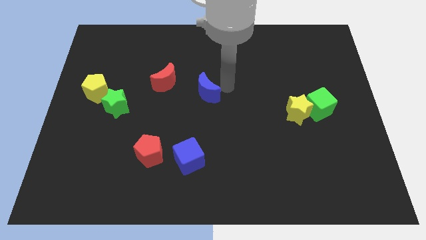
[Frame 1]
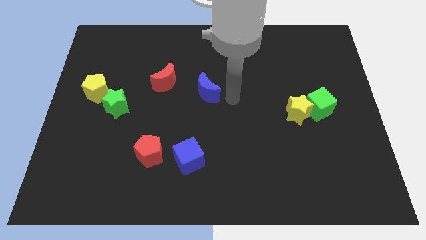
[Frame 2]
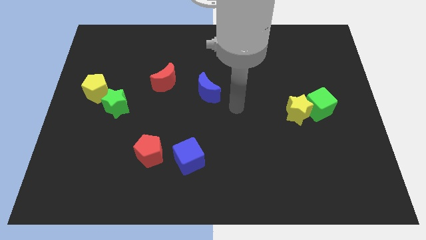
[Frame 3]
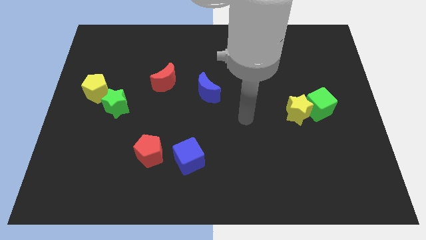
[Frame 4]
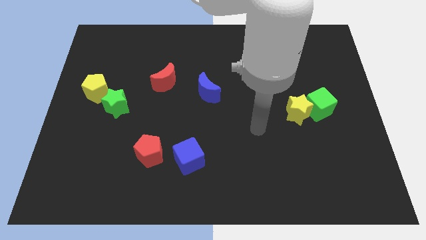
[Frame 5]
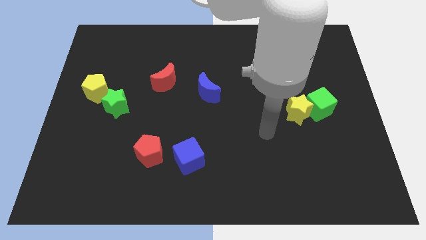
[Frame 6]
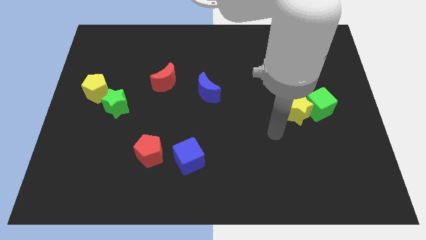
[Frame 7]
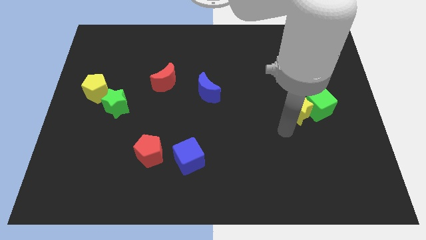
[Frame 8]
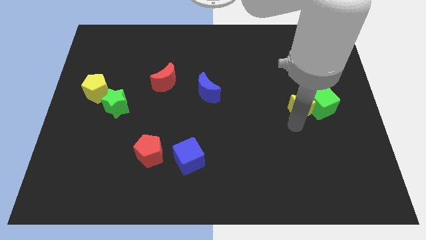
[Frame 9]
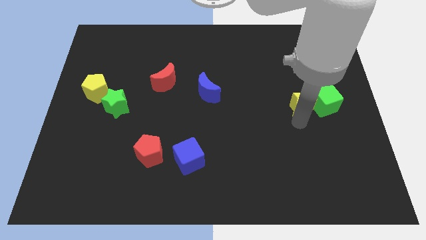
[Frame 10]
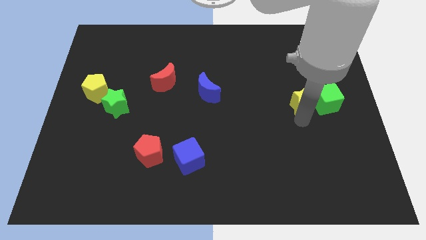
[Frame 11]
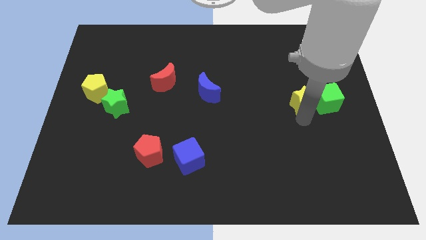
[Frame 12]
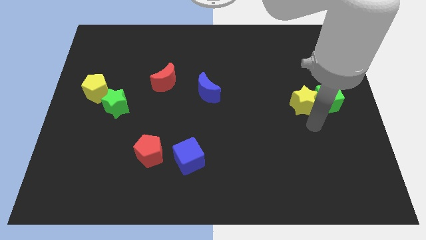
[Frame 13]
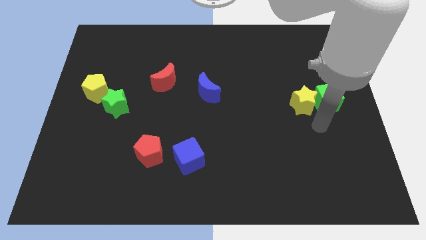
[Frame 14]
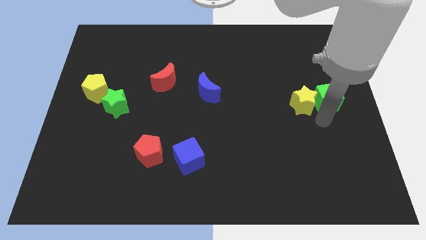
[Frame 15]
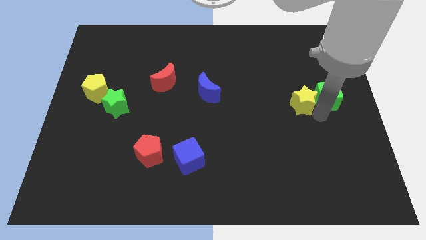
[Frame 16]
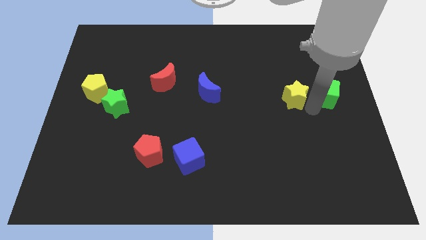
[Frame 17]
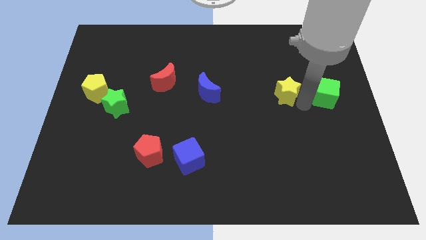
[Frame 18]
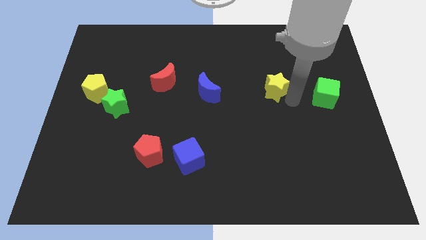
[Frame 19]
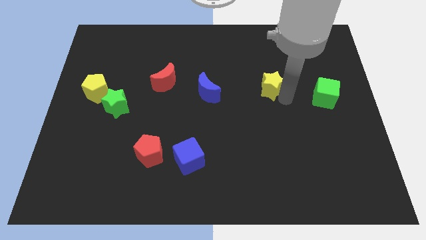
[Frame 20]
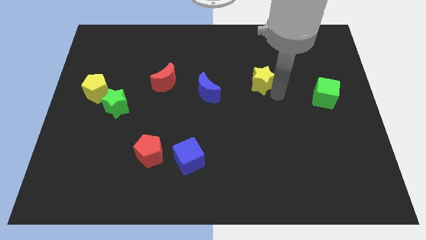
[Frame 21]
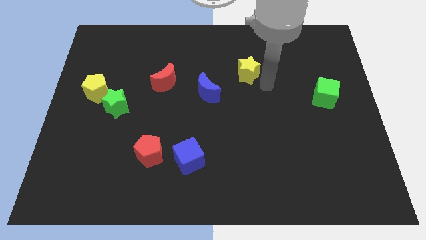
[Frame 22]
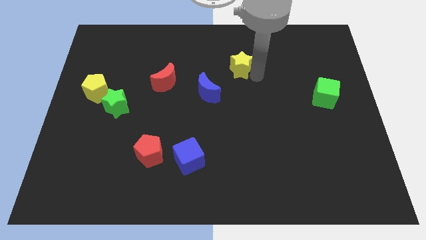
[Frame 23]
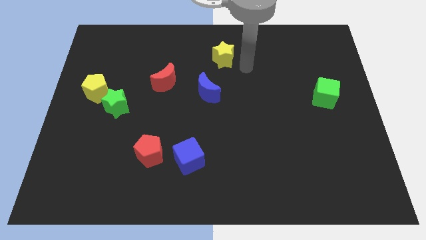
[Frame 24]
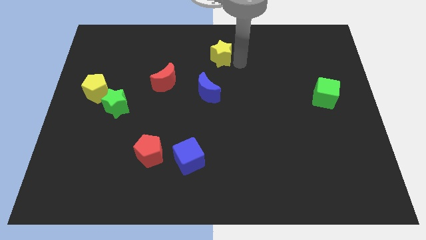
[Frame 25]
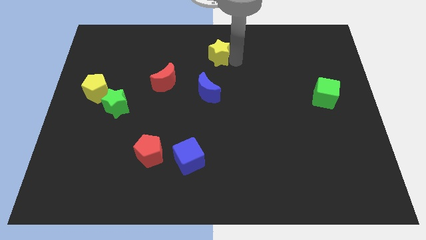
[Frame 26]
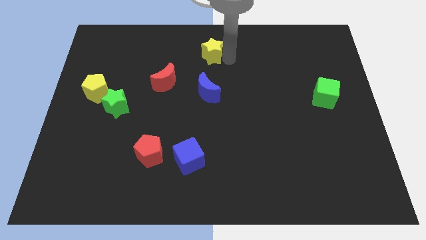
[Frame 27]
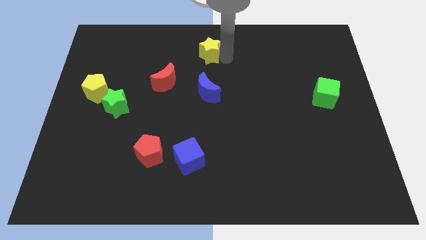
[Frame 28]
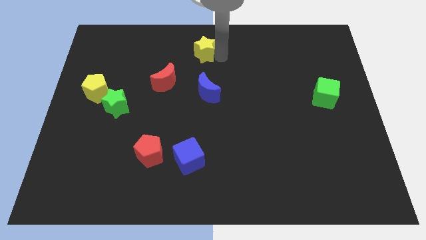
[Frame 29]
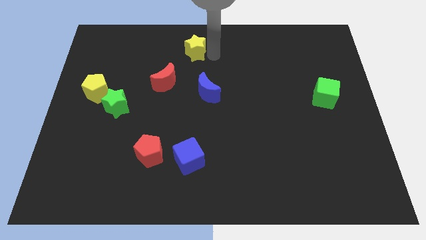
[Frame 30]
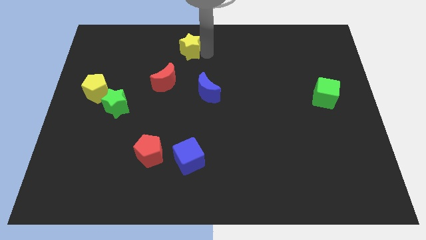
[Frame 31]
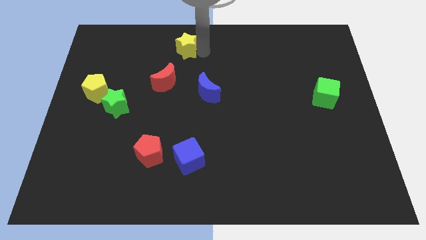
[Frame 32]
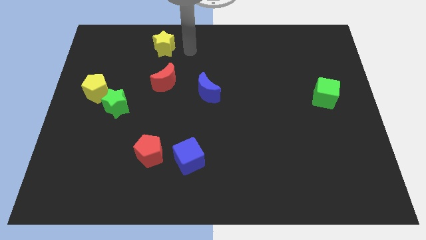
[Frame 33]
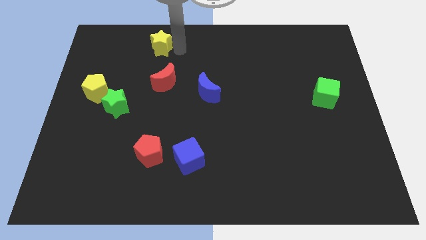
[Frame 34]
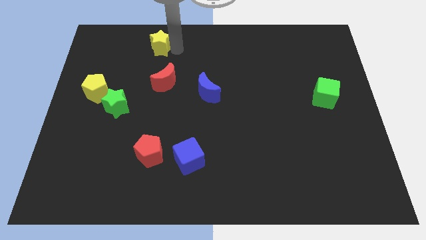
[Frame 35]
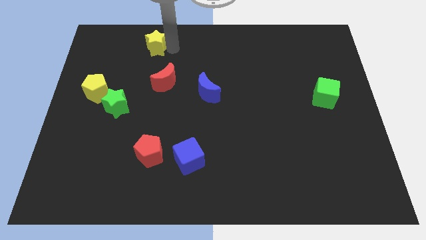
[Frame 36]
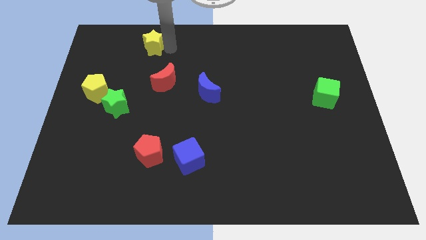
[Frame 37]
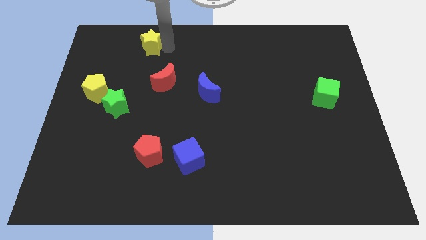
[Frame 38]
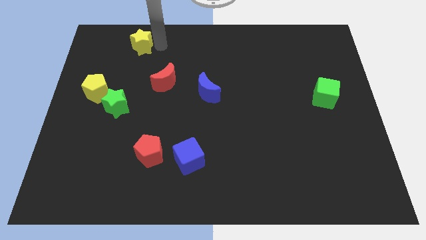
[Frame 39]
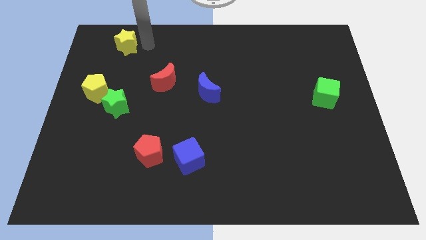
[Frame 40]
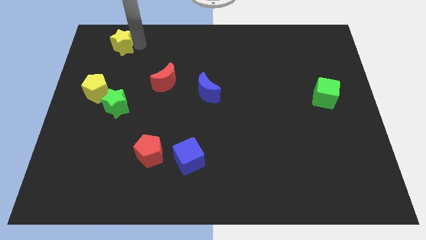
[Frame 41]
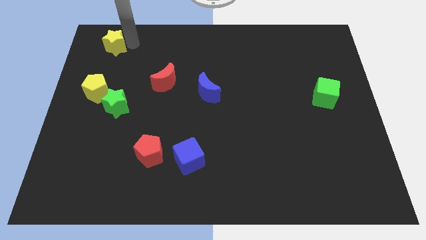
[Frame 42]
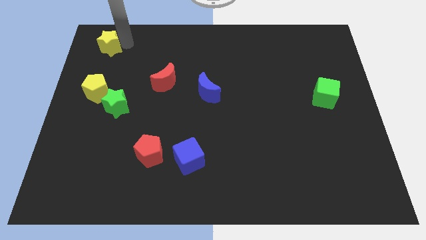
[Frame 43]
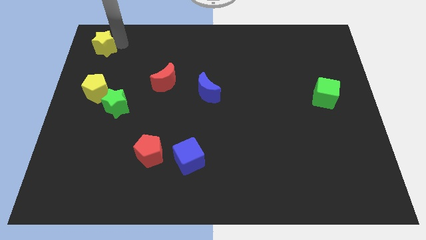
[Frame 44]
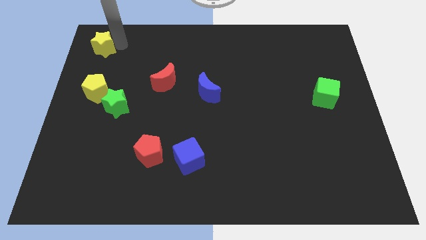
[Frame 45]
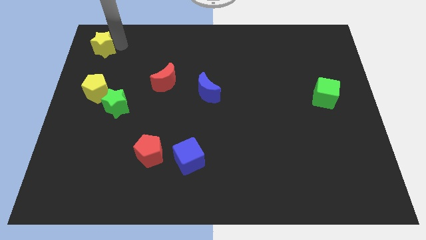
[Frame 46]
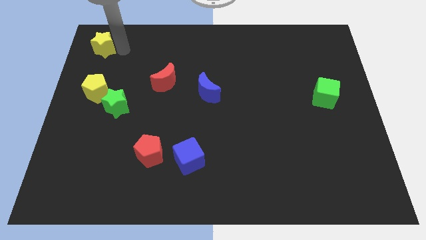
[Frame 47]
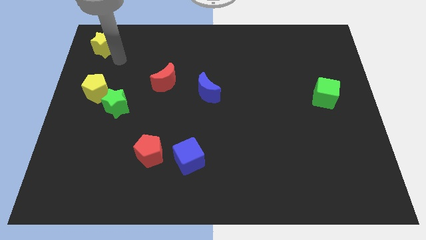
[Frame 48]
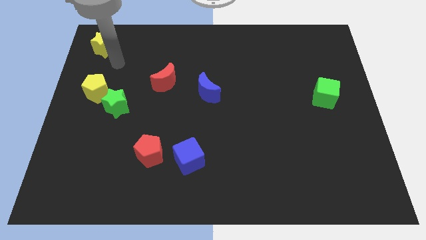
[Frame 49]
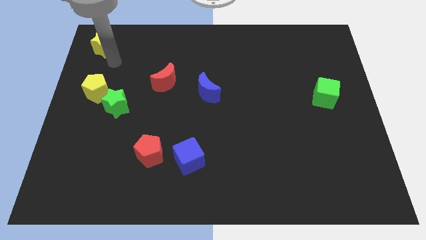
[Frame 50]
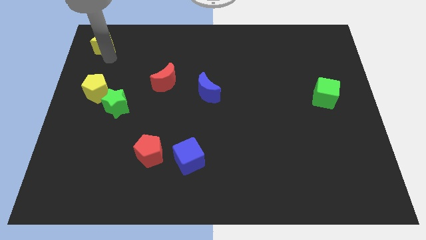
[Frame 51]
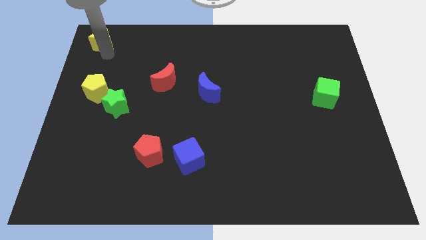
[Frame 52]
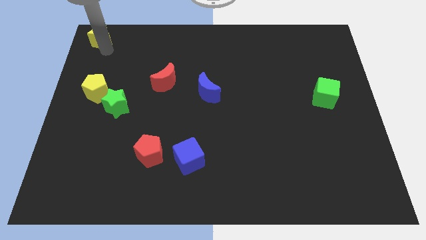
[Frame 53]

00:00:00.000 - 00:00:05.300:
place the yellow star above the yellow pentagon

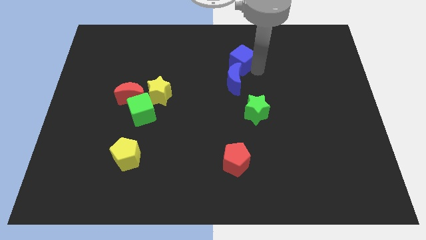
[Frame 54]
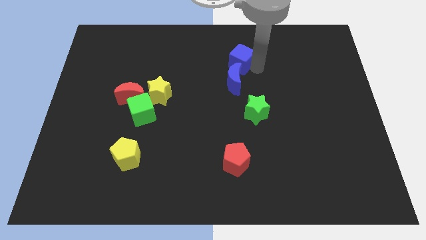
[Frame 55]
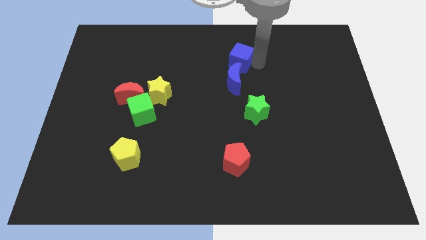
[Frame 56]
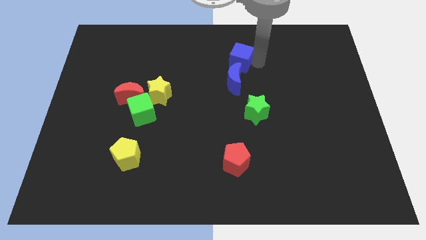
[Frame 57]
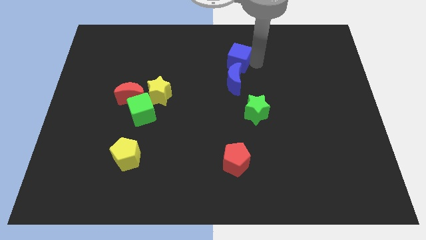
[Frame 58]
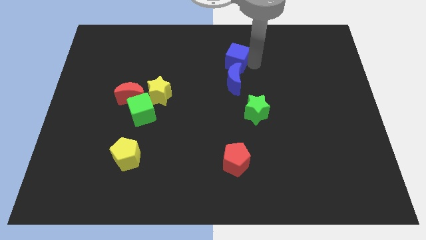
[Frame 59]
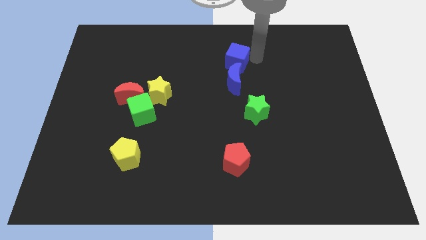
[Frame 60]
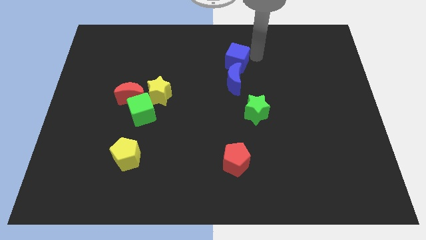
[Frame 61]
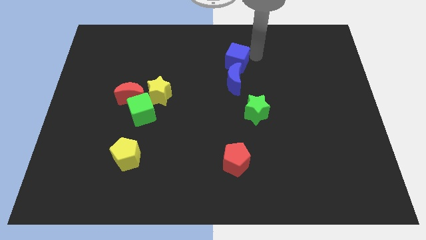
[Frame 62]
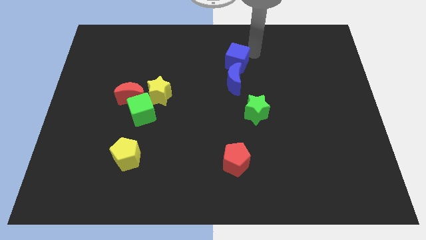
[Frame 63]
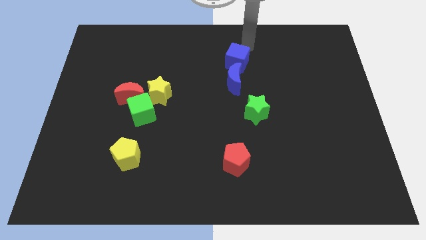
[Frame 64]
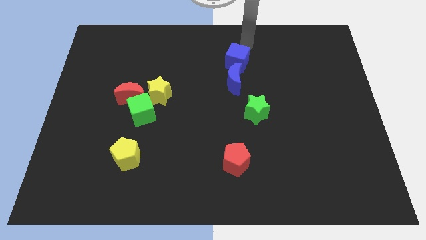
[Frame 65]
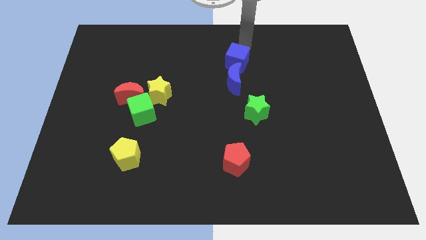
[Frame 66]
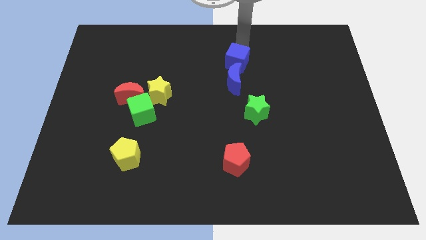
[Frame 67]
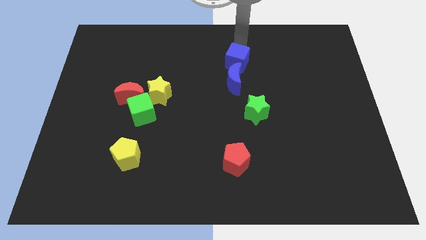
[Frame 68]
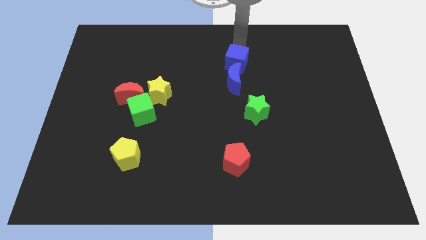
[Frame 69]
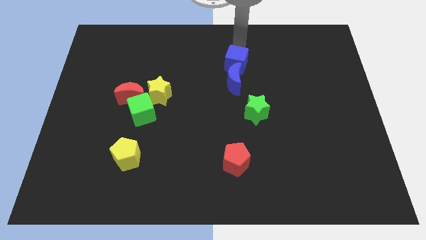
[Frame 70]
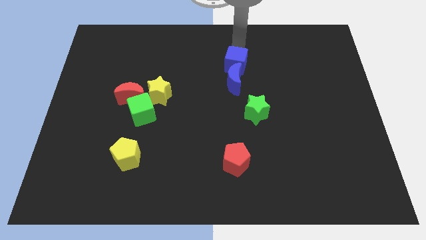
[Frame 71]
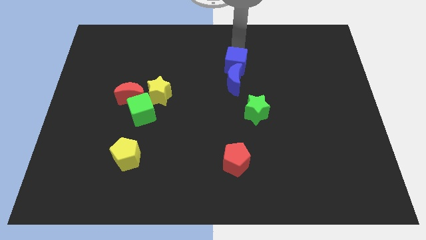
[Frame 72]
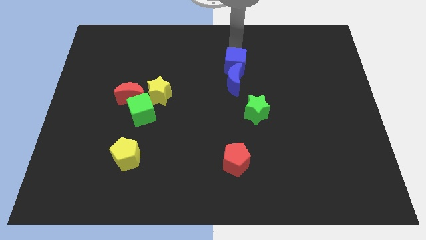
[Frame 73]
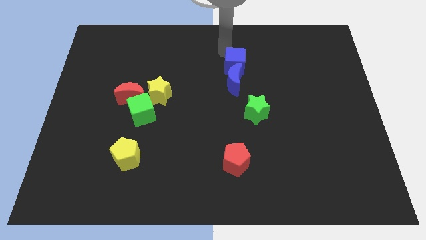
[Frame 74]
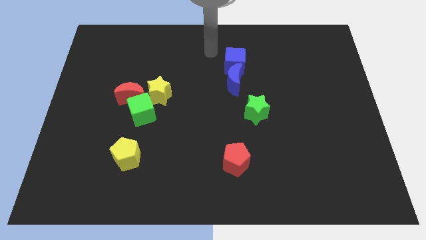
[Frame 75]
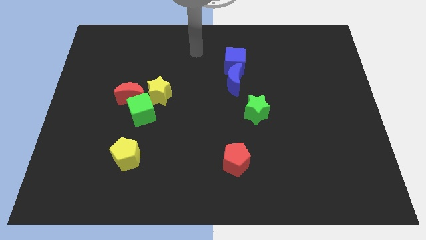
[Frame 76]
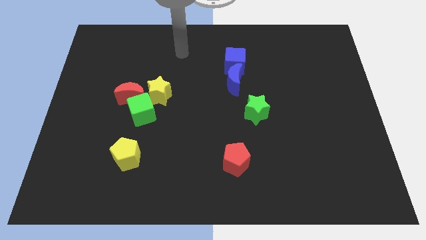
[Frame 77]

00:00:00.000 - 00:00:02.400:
move the blue cube into the blue moon

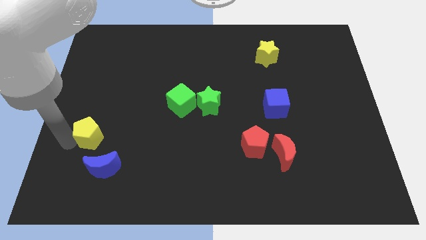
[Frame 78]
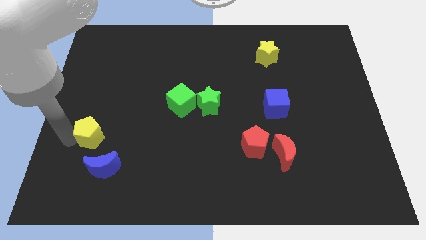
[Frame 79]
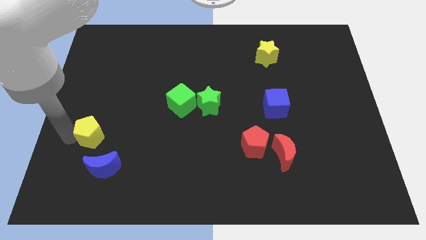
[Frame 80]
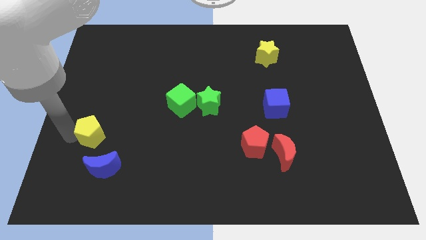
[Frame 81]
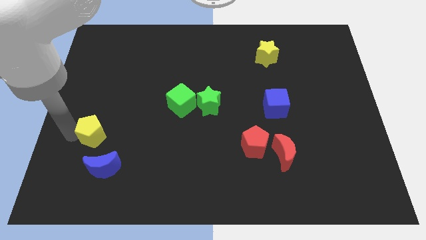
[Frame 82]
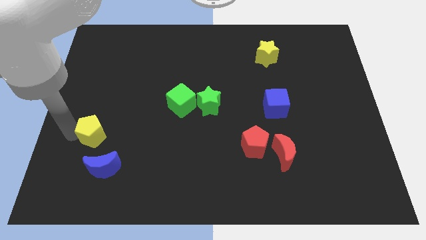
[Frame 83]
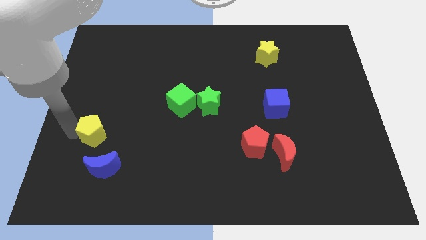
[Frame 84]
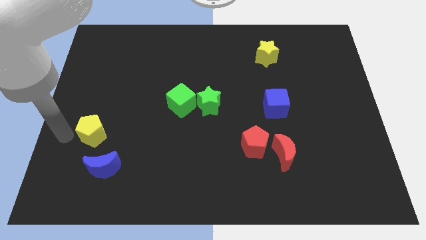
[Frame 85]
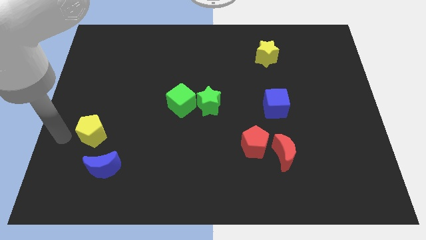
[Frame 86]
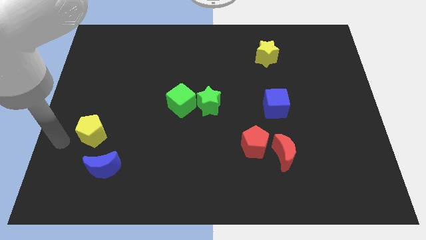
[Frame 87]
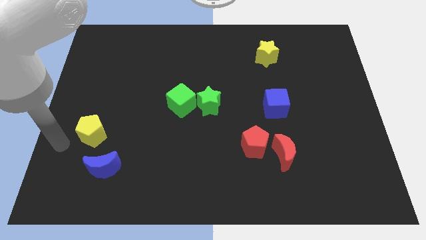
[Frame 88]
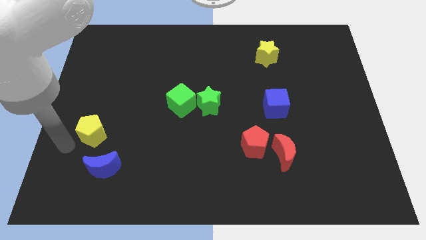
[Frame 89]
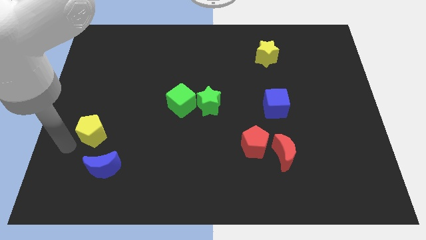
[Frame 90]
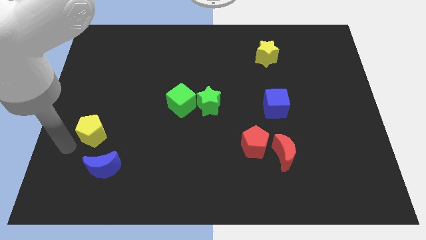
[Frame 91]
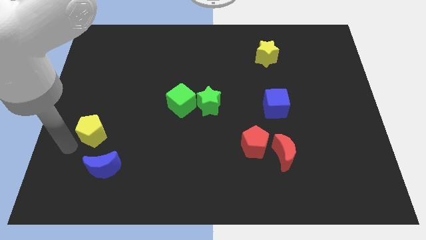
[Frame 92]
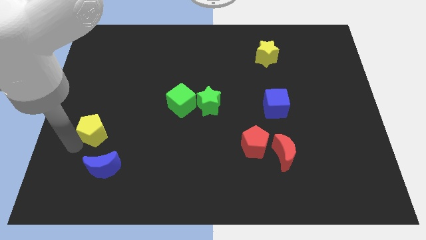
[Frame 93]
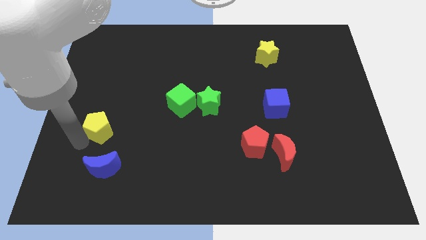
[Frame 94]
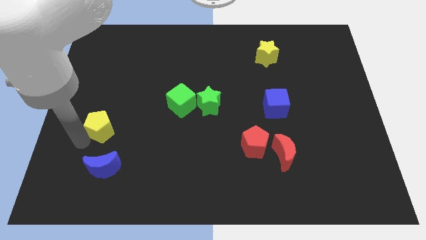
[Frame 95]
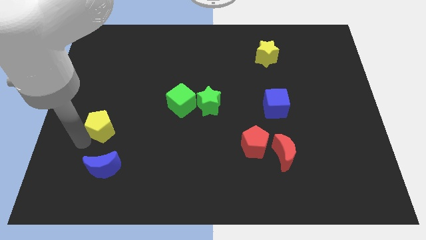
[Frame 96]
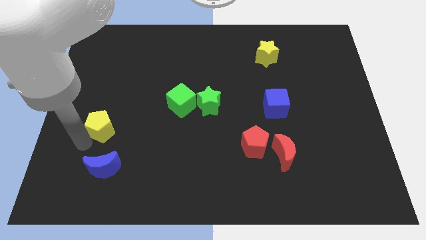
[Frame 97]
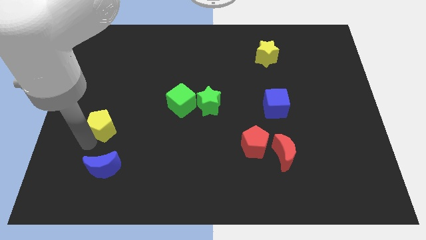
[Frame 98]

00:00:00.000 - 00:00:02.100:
push the yellow pentagon to the top of the blue crescent
